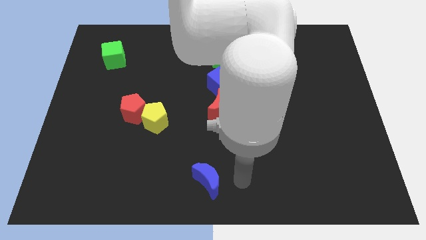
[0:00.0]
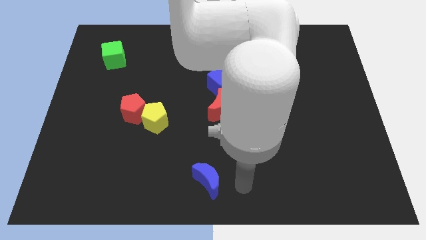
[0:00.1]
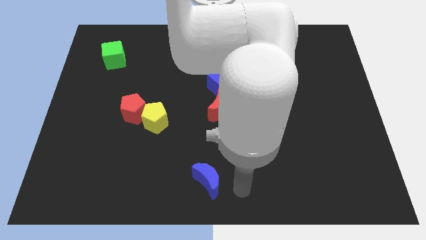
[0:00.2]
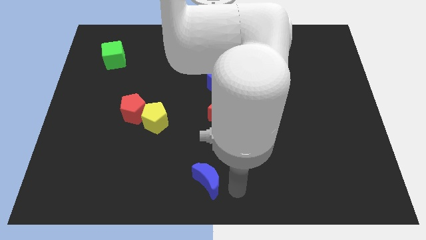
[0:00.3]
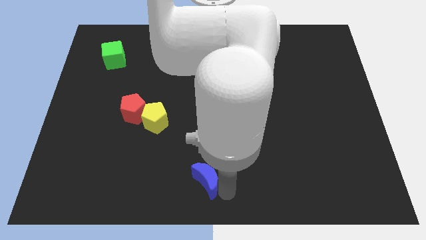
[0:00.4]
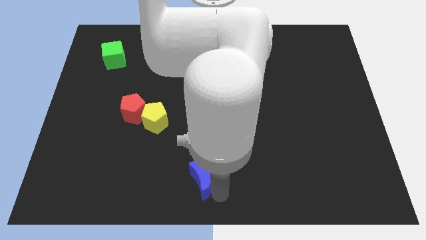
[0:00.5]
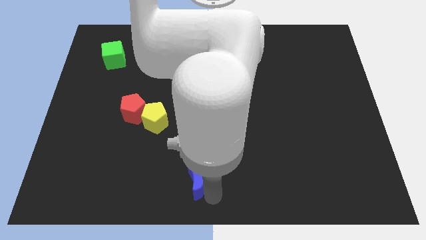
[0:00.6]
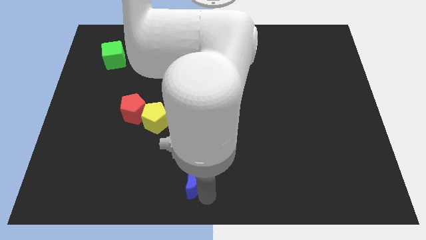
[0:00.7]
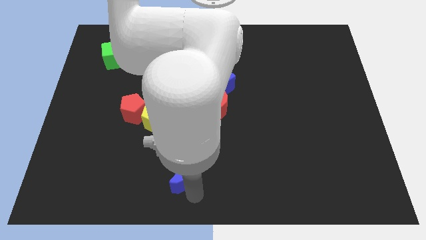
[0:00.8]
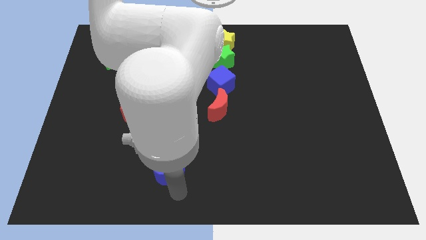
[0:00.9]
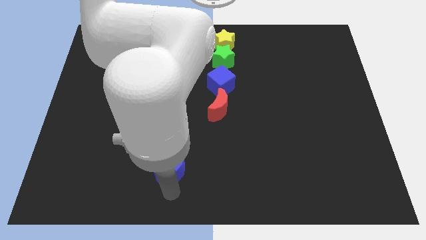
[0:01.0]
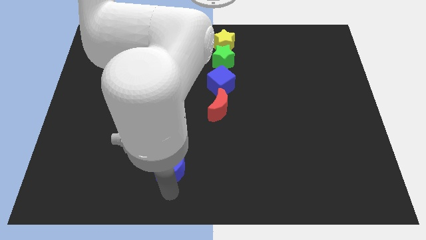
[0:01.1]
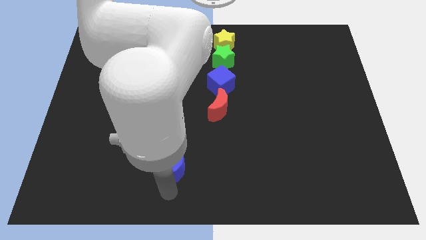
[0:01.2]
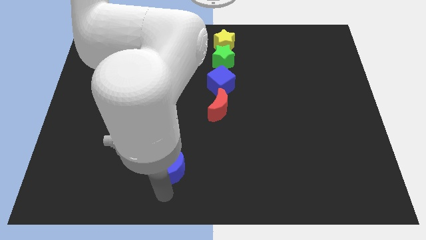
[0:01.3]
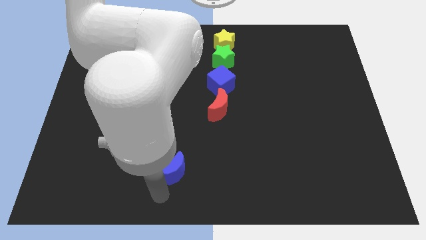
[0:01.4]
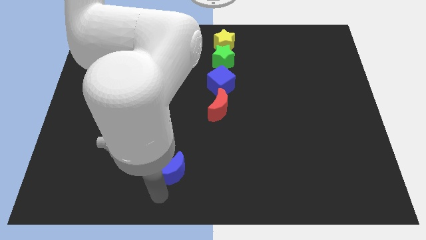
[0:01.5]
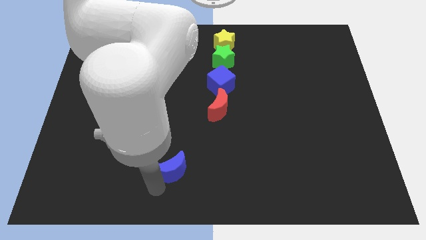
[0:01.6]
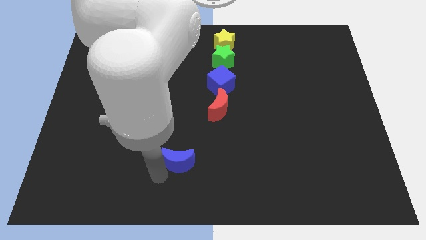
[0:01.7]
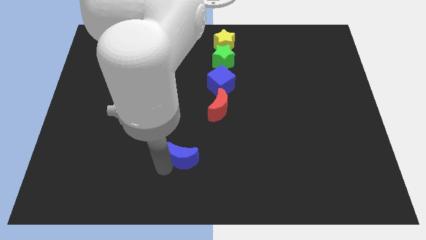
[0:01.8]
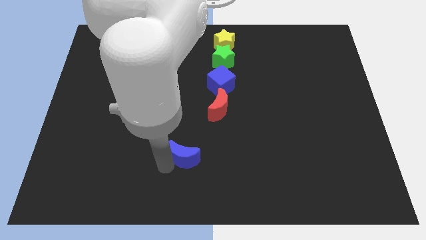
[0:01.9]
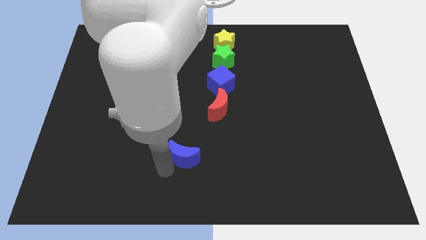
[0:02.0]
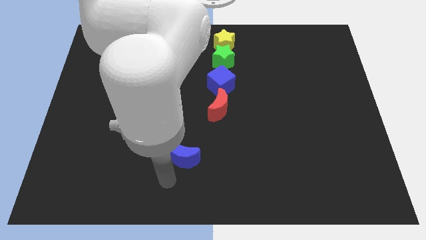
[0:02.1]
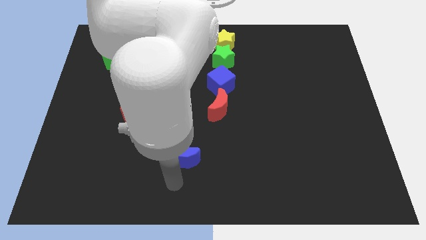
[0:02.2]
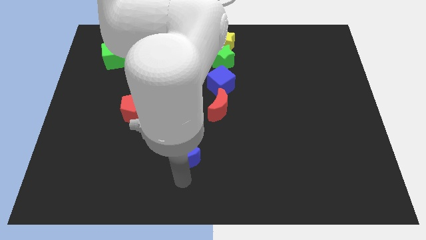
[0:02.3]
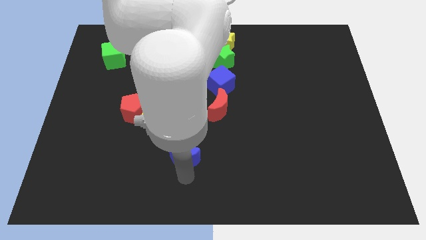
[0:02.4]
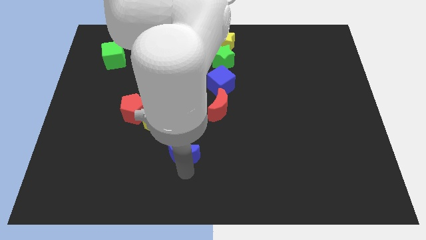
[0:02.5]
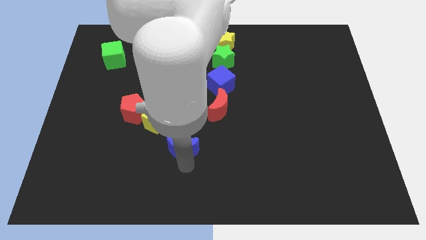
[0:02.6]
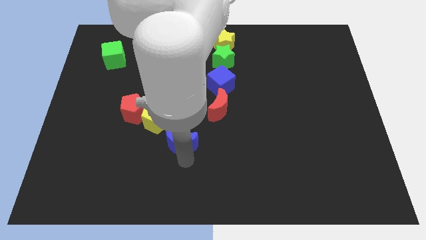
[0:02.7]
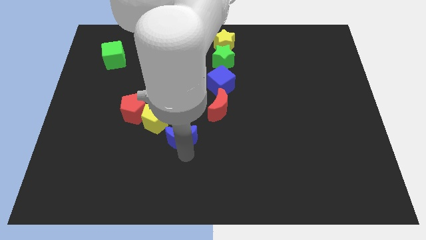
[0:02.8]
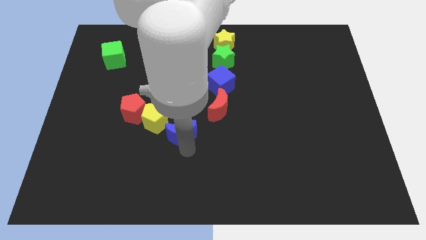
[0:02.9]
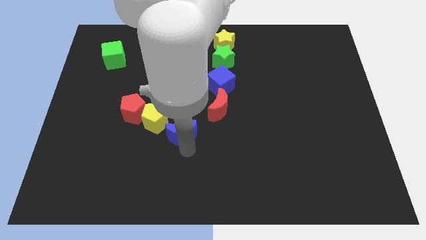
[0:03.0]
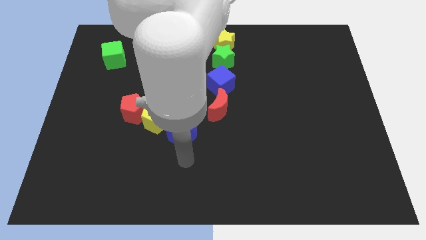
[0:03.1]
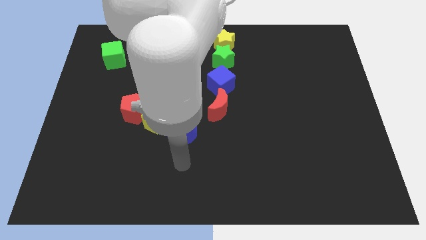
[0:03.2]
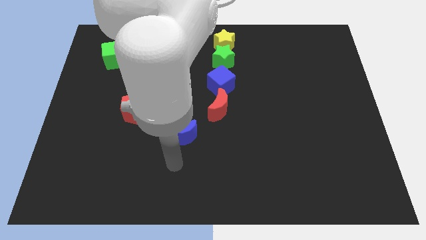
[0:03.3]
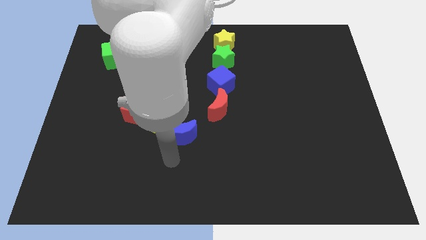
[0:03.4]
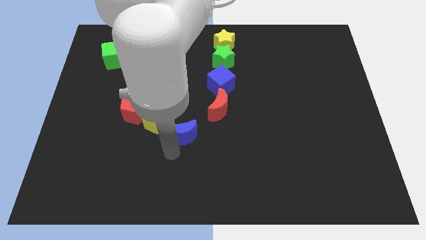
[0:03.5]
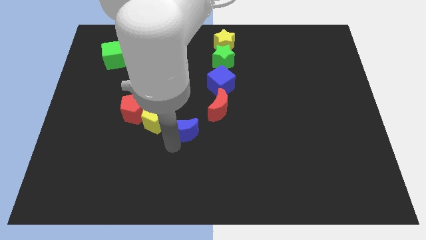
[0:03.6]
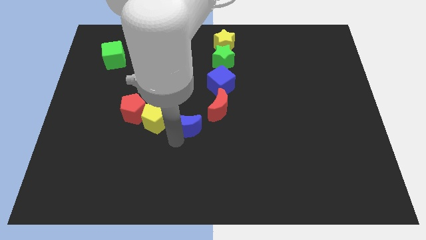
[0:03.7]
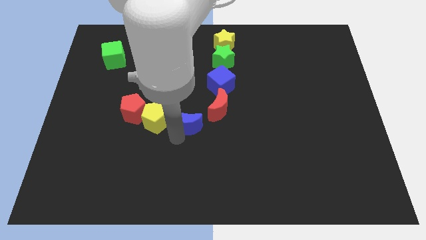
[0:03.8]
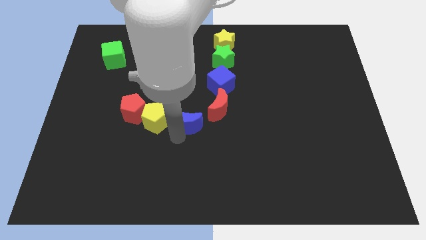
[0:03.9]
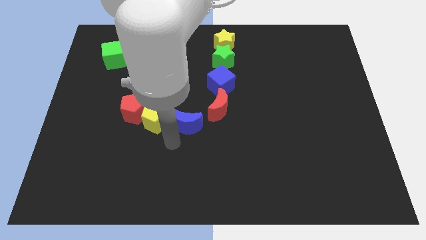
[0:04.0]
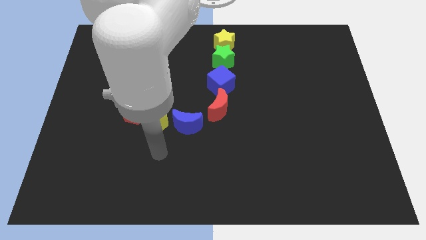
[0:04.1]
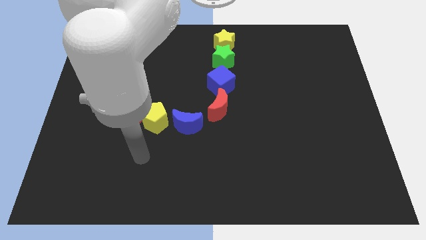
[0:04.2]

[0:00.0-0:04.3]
push the blue moon to the right side of the yellow pentagon

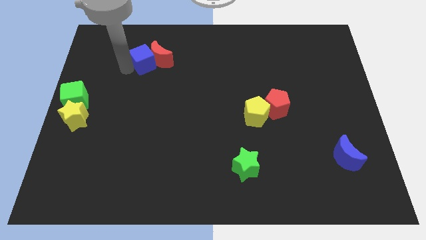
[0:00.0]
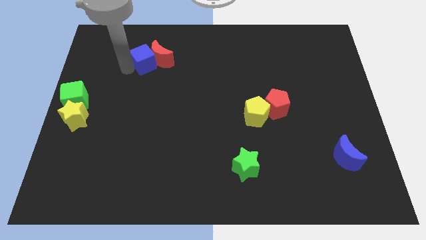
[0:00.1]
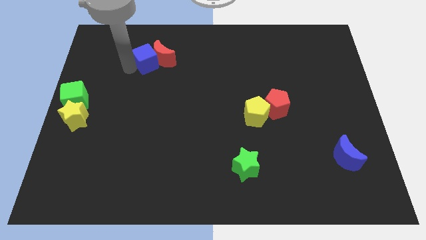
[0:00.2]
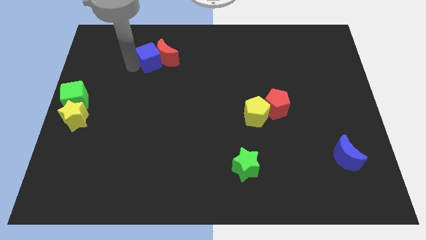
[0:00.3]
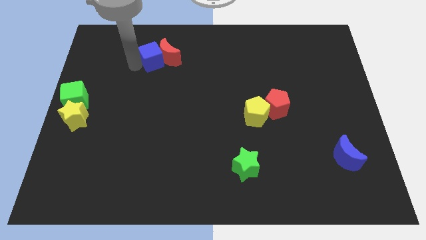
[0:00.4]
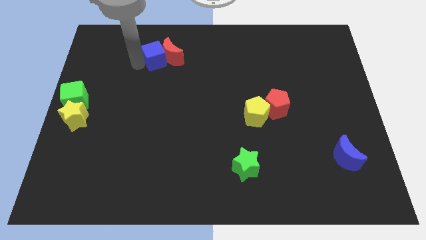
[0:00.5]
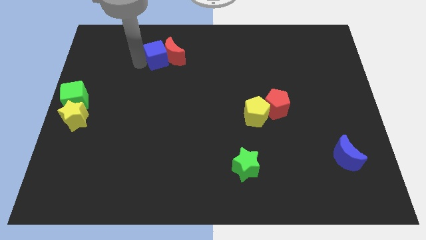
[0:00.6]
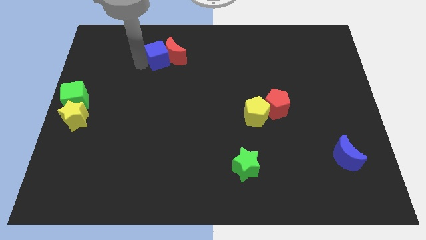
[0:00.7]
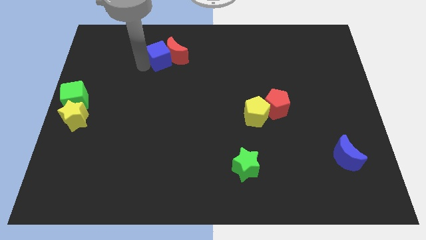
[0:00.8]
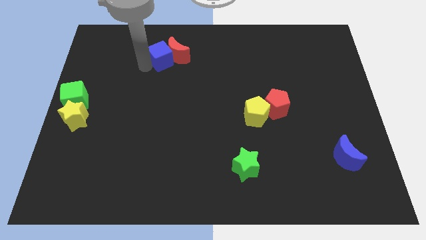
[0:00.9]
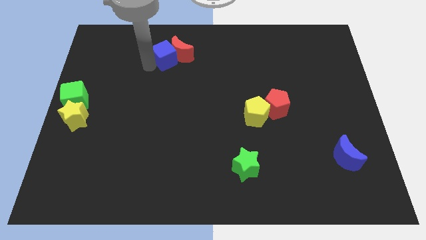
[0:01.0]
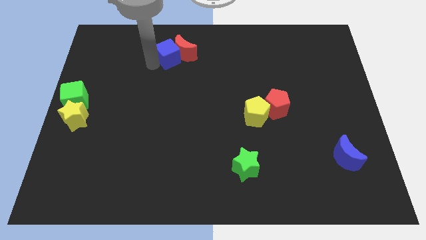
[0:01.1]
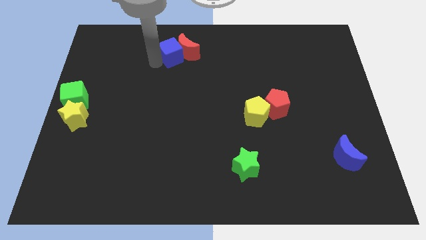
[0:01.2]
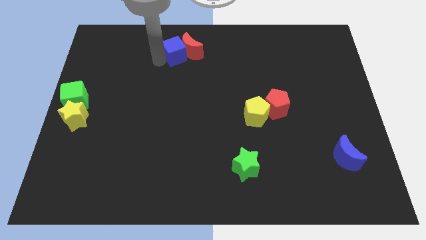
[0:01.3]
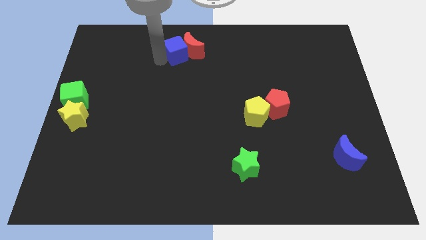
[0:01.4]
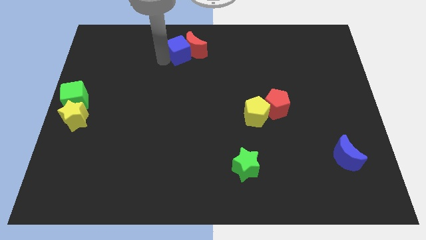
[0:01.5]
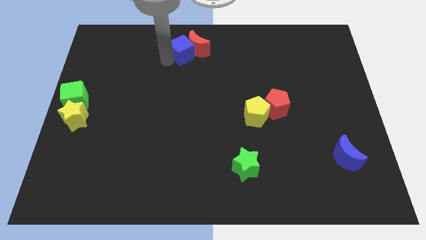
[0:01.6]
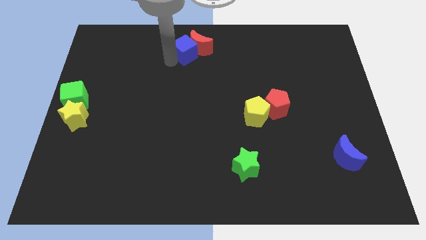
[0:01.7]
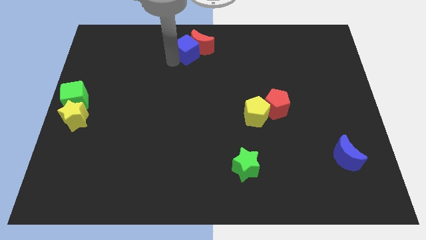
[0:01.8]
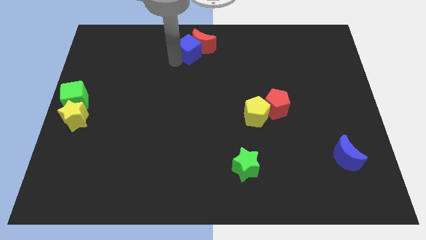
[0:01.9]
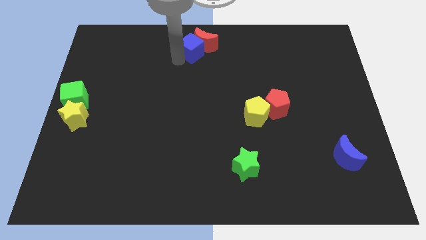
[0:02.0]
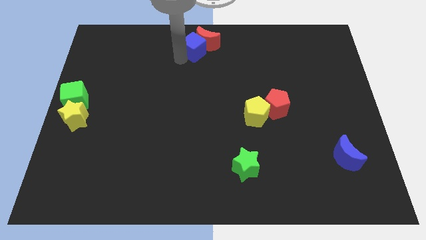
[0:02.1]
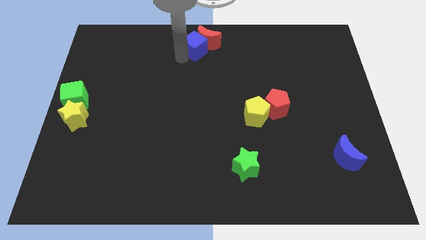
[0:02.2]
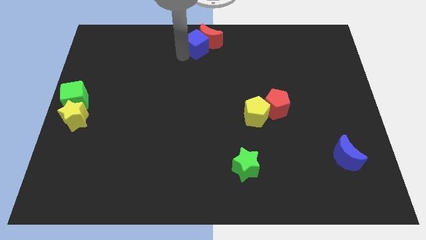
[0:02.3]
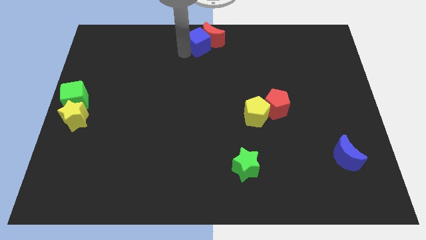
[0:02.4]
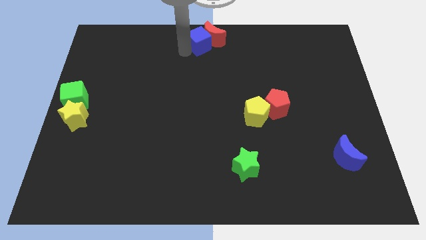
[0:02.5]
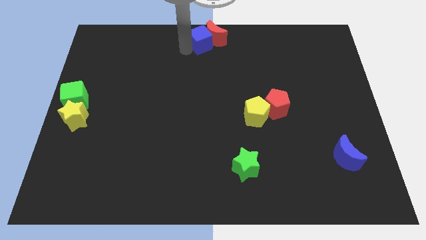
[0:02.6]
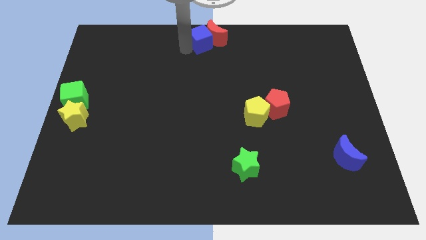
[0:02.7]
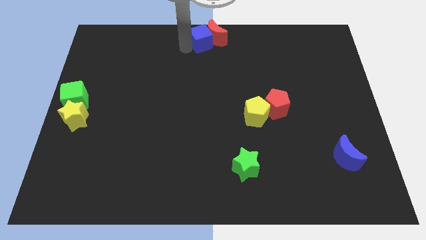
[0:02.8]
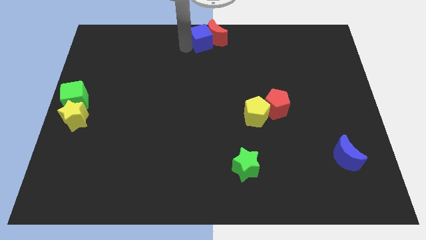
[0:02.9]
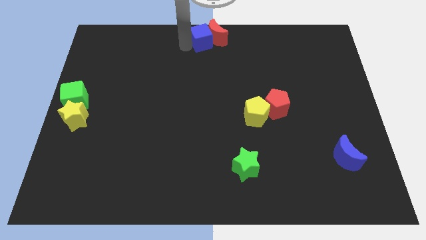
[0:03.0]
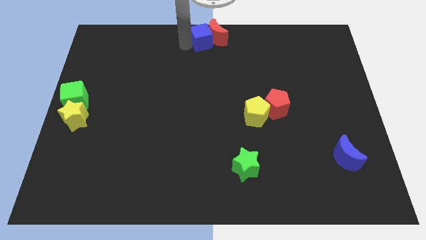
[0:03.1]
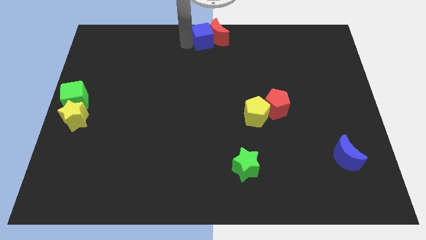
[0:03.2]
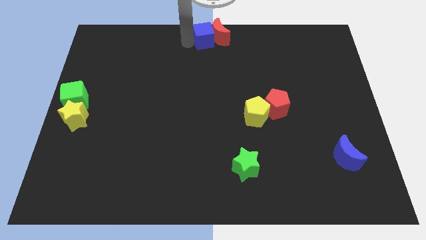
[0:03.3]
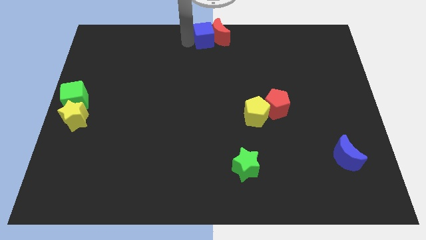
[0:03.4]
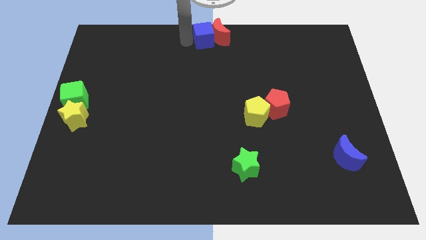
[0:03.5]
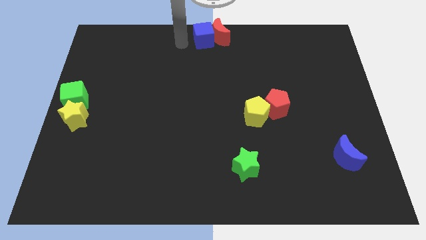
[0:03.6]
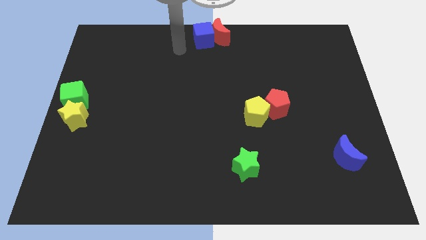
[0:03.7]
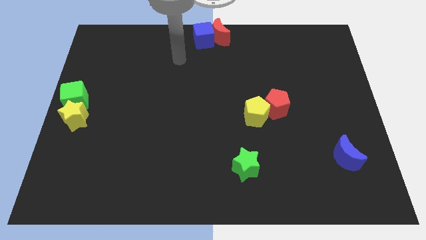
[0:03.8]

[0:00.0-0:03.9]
place the red crescent and the blue cube at the top center

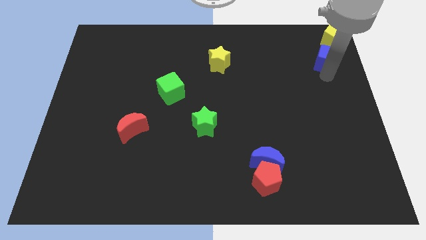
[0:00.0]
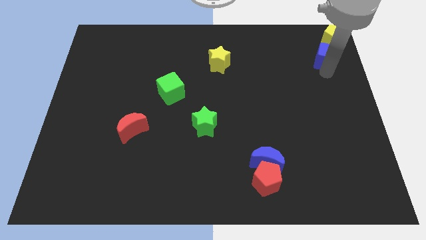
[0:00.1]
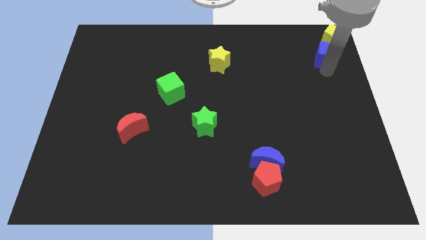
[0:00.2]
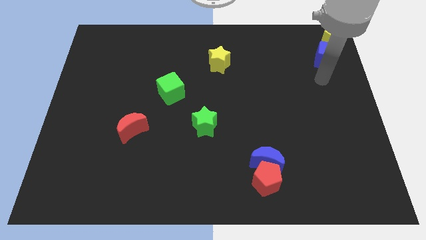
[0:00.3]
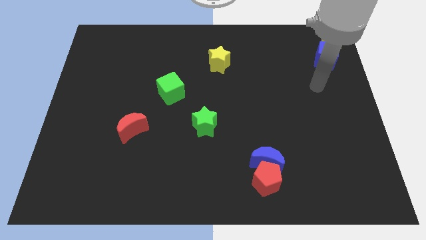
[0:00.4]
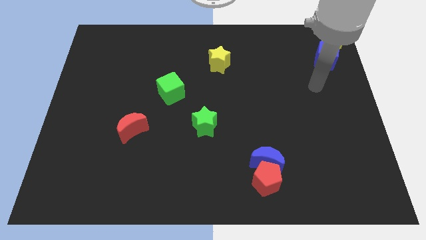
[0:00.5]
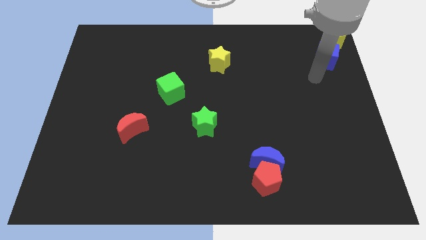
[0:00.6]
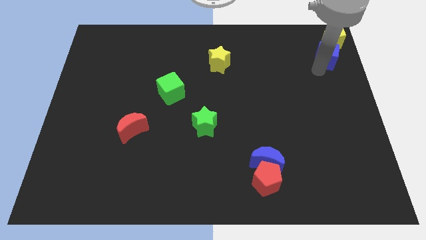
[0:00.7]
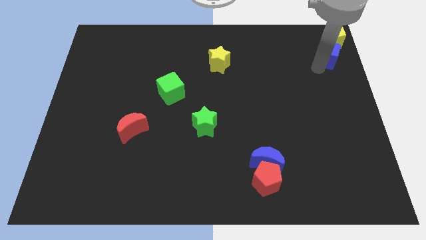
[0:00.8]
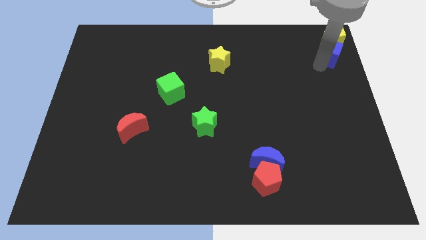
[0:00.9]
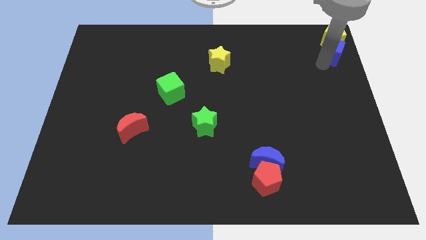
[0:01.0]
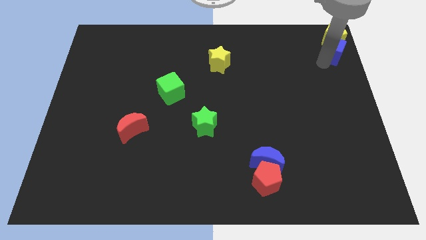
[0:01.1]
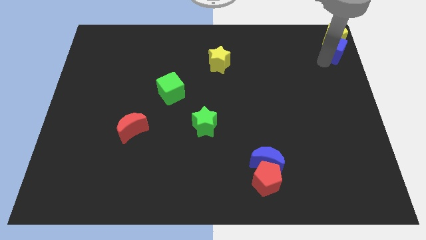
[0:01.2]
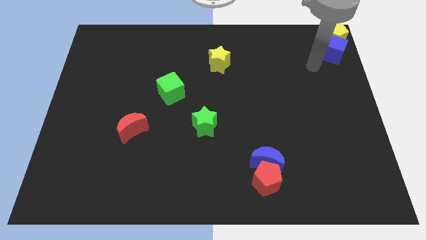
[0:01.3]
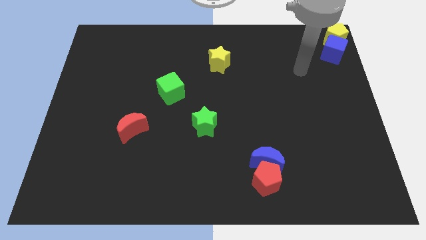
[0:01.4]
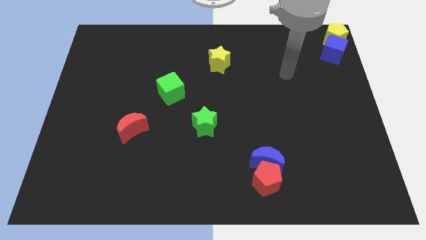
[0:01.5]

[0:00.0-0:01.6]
push the blue cube towards the bottom of the yellow pentagon towards the top right corner of the board
